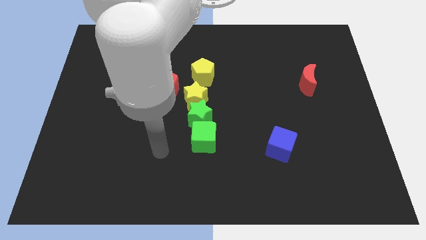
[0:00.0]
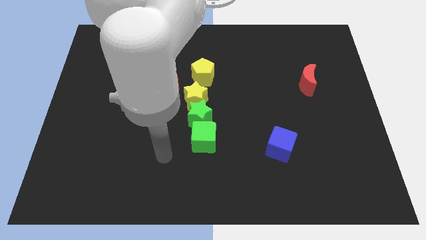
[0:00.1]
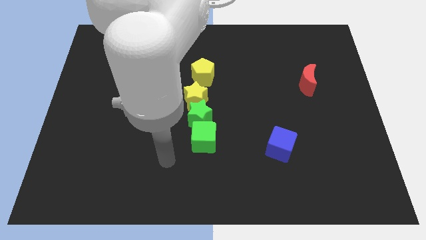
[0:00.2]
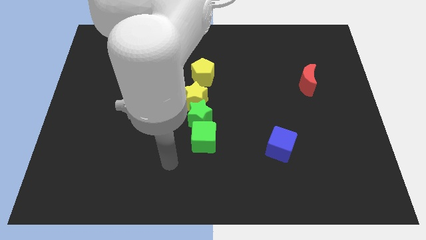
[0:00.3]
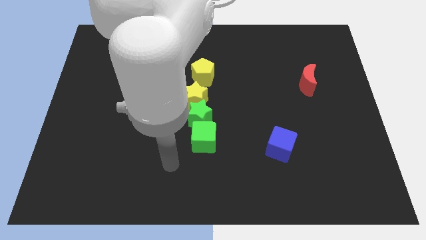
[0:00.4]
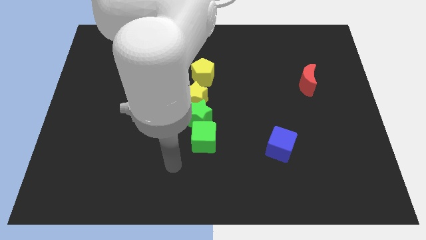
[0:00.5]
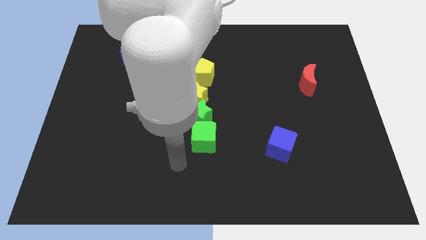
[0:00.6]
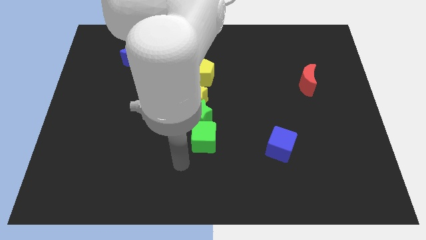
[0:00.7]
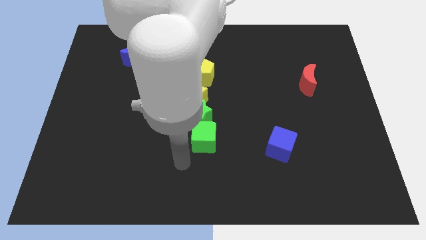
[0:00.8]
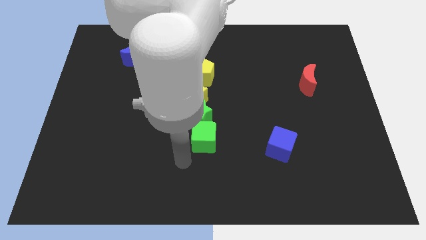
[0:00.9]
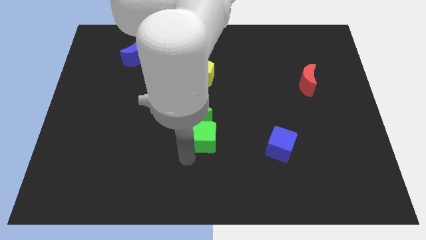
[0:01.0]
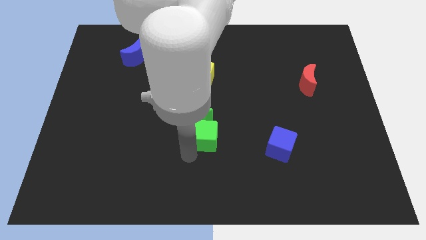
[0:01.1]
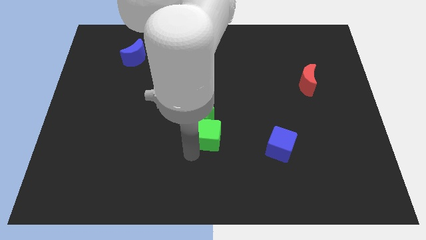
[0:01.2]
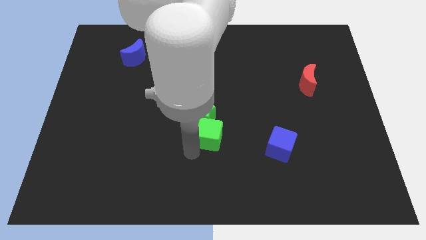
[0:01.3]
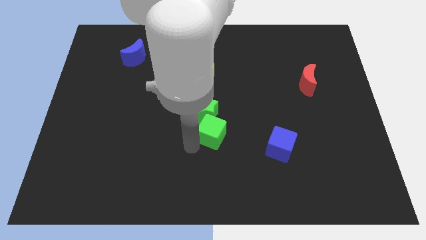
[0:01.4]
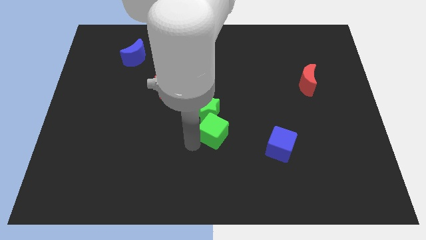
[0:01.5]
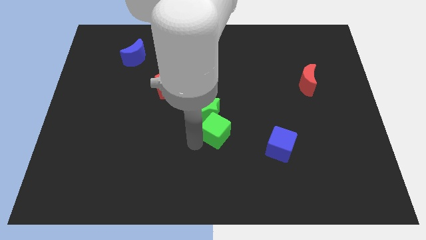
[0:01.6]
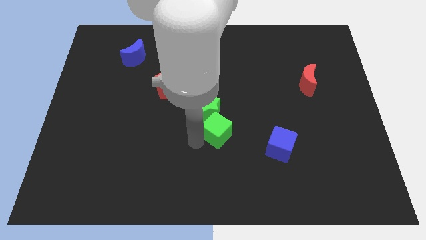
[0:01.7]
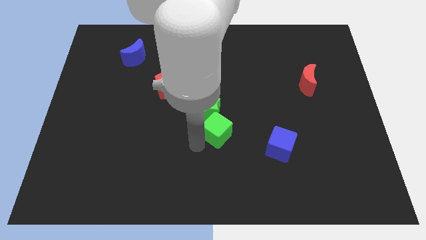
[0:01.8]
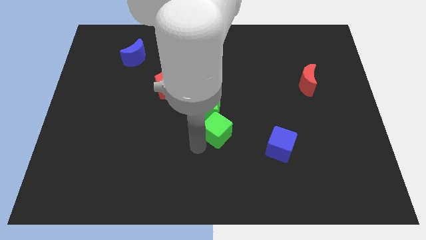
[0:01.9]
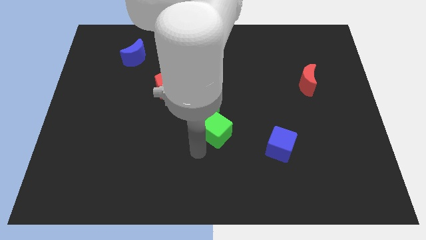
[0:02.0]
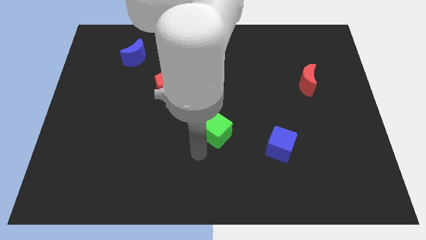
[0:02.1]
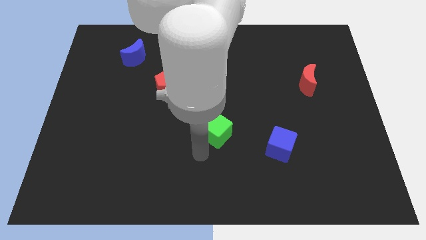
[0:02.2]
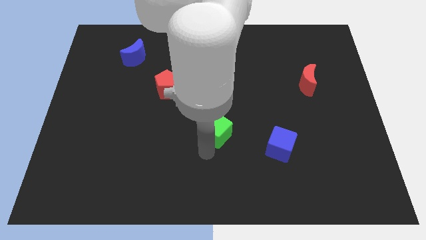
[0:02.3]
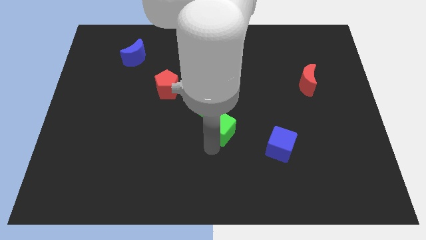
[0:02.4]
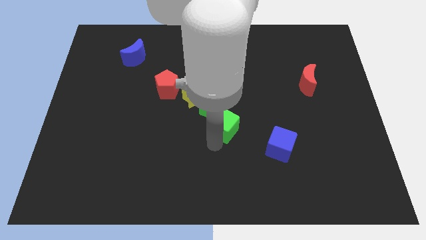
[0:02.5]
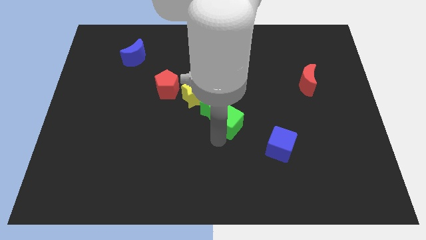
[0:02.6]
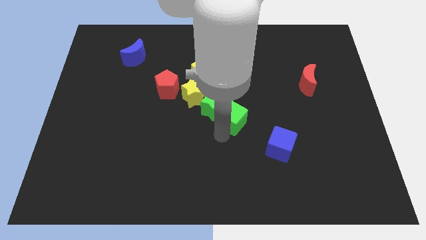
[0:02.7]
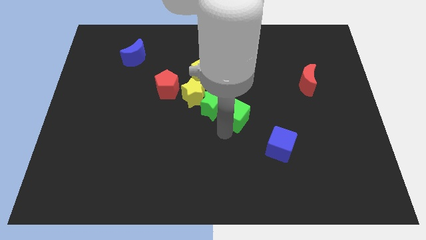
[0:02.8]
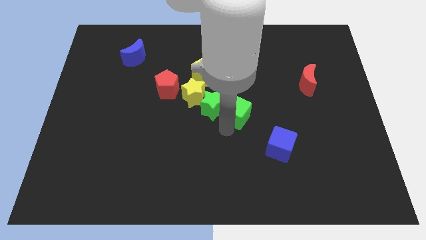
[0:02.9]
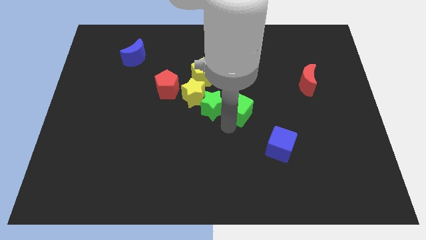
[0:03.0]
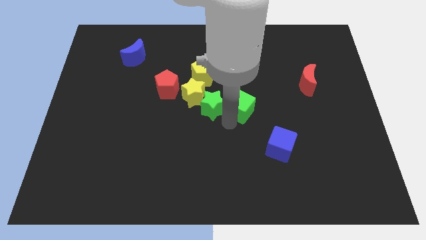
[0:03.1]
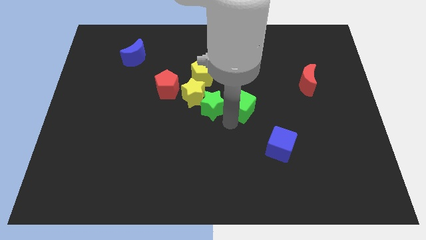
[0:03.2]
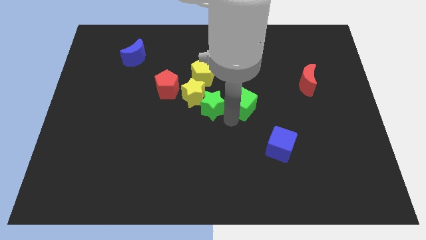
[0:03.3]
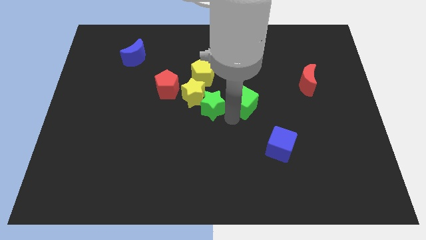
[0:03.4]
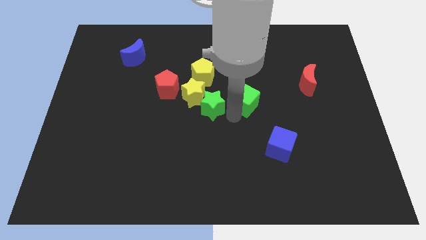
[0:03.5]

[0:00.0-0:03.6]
move the green cube to the right of the green star

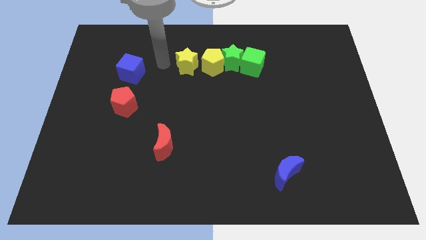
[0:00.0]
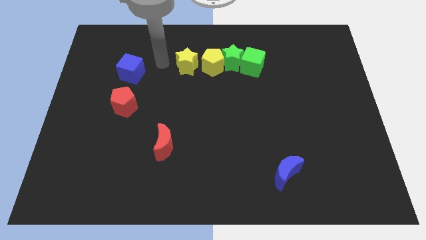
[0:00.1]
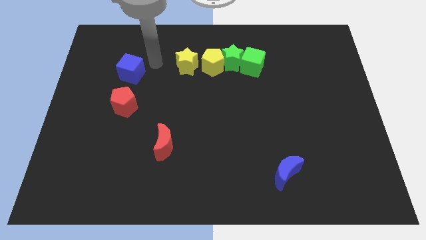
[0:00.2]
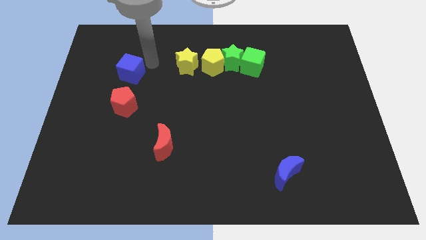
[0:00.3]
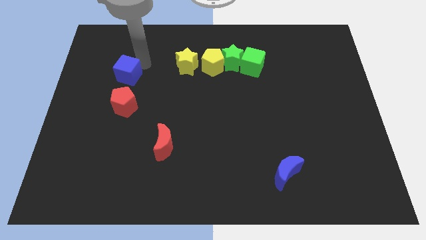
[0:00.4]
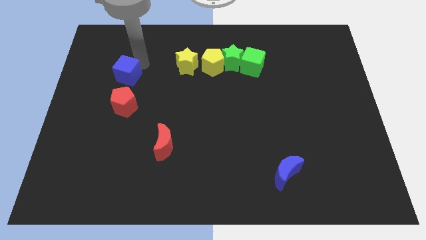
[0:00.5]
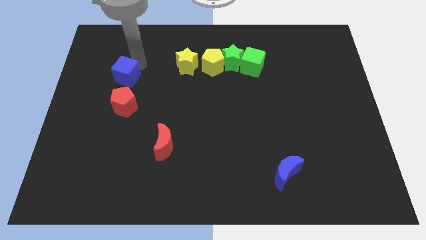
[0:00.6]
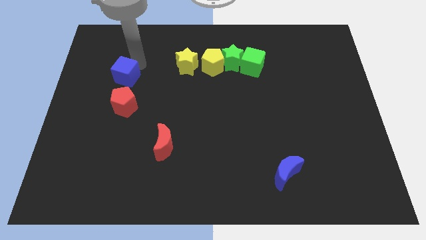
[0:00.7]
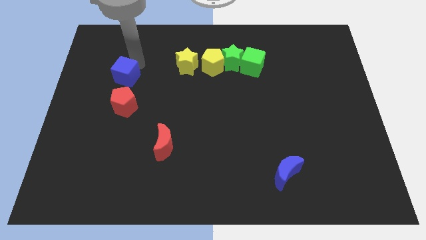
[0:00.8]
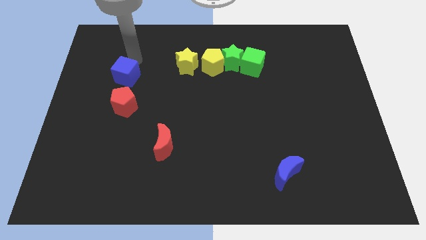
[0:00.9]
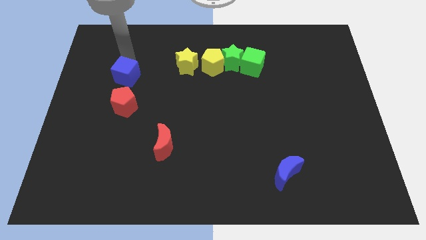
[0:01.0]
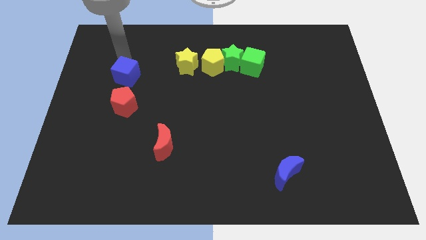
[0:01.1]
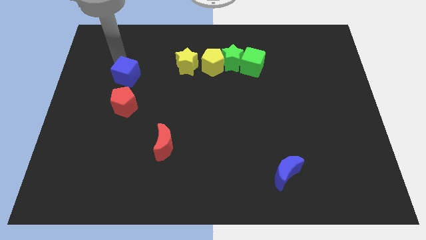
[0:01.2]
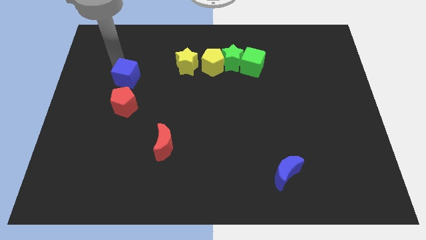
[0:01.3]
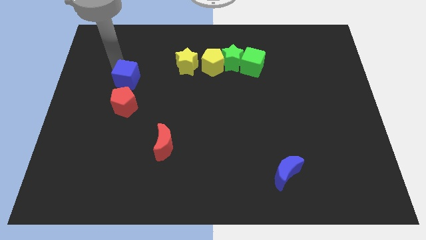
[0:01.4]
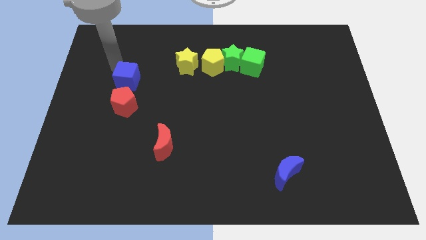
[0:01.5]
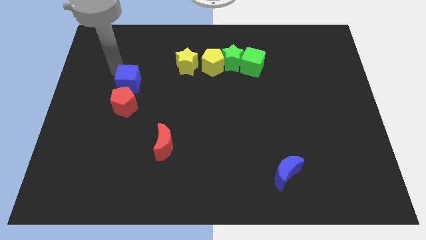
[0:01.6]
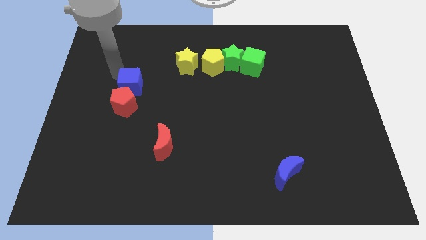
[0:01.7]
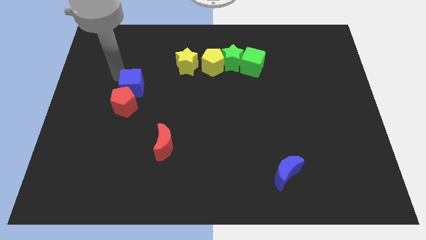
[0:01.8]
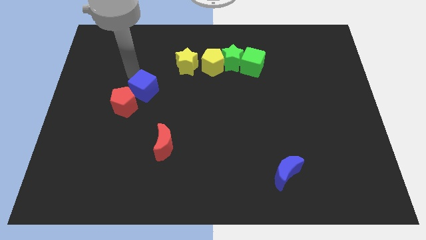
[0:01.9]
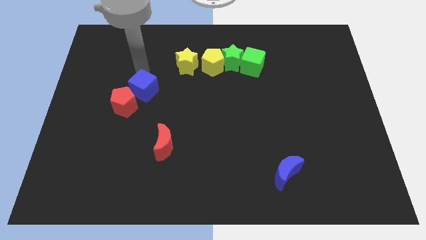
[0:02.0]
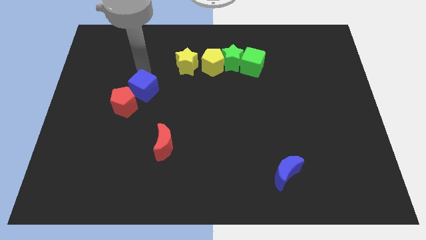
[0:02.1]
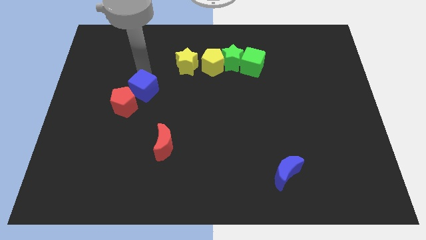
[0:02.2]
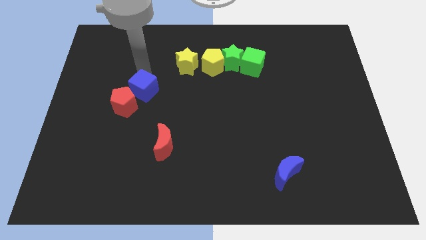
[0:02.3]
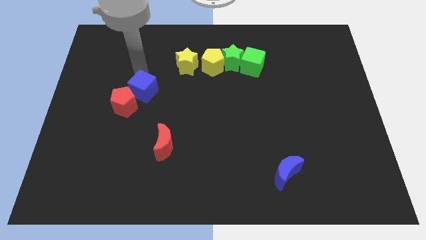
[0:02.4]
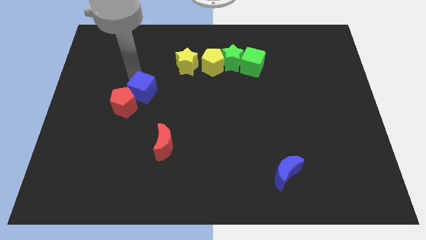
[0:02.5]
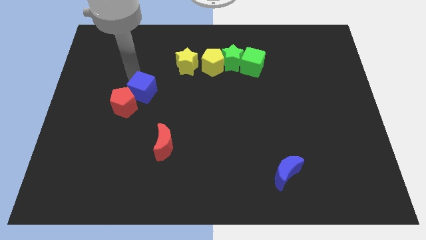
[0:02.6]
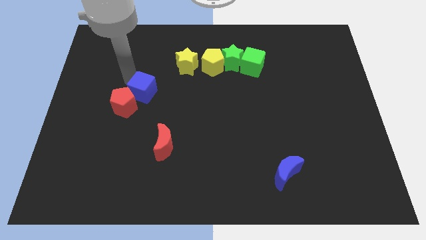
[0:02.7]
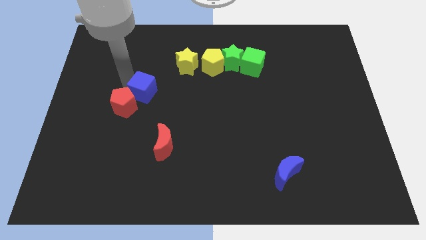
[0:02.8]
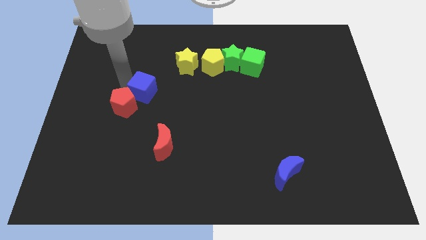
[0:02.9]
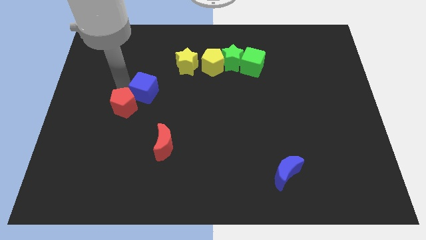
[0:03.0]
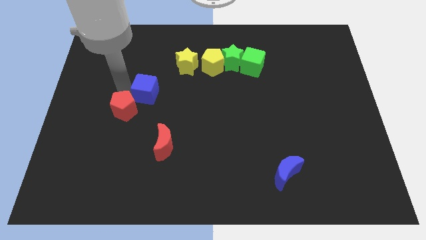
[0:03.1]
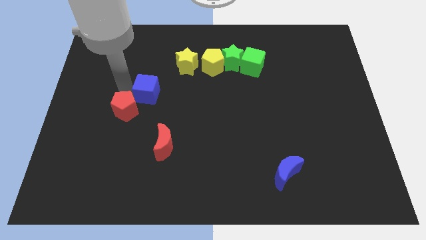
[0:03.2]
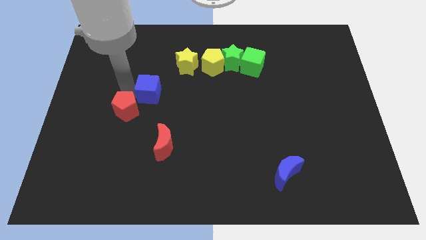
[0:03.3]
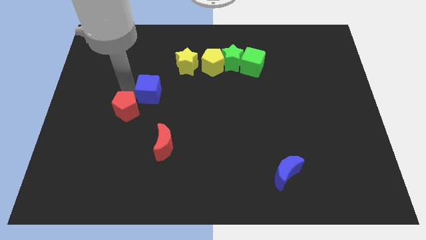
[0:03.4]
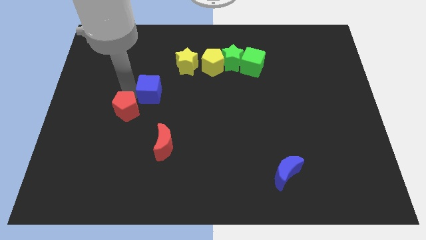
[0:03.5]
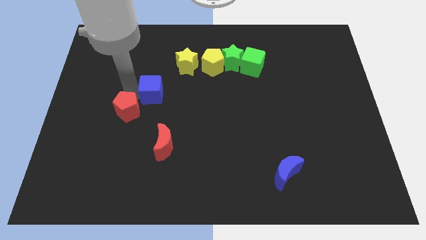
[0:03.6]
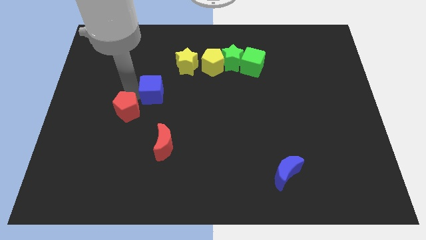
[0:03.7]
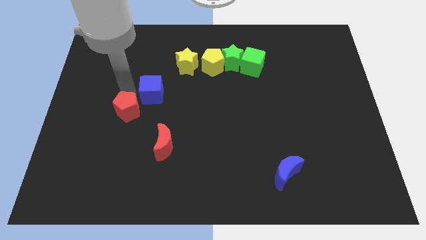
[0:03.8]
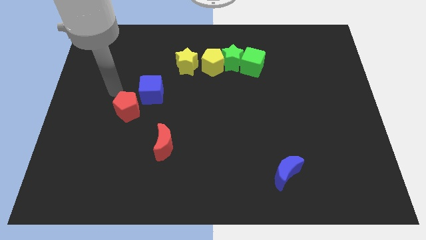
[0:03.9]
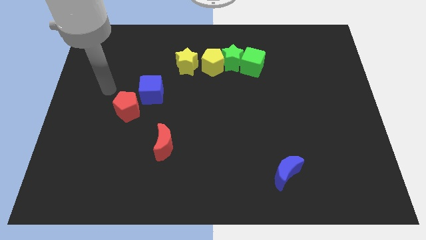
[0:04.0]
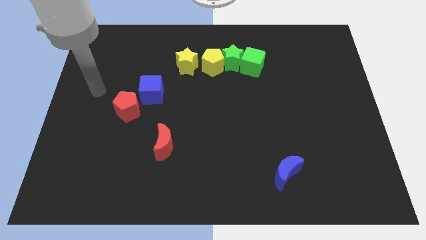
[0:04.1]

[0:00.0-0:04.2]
place blue cube diagonally right above red pentagon

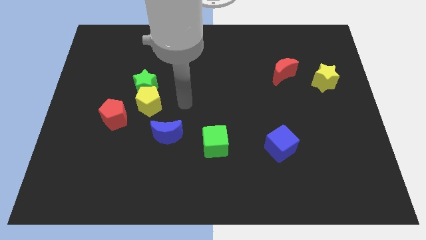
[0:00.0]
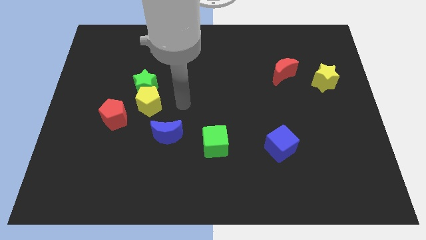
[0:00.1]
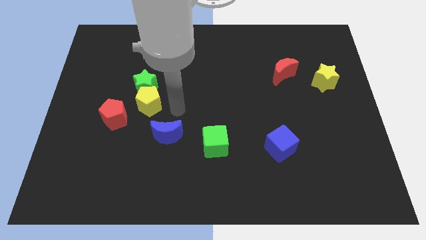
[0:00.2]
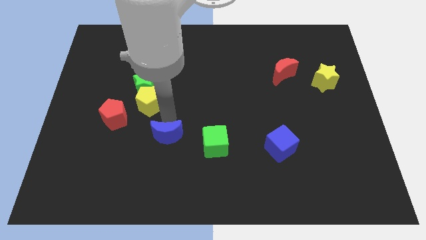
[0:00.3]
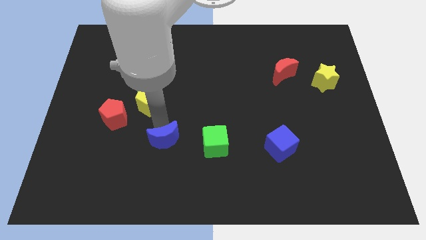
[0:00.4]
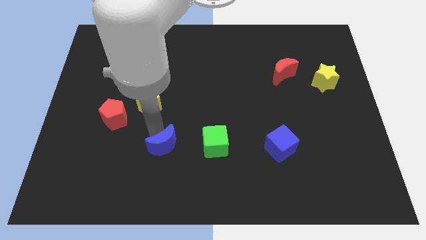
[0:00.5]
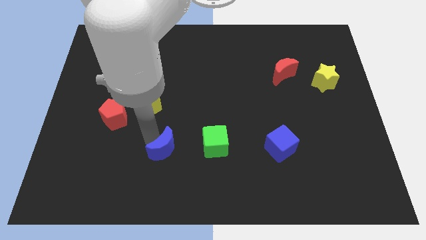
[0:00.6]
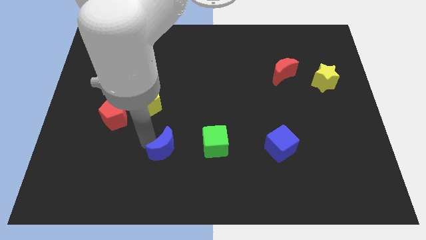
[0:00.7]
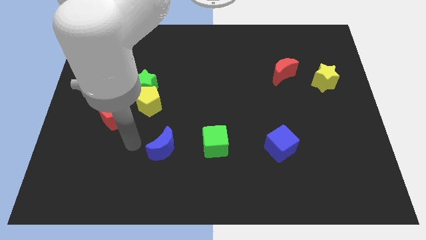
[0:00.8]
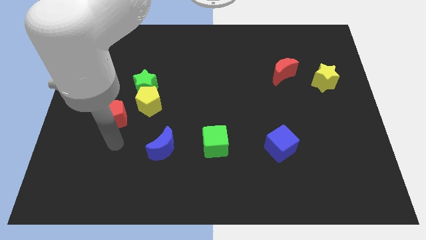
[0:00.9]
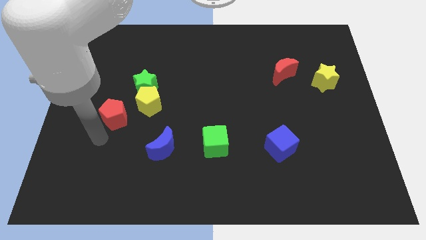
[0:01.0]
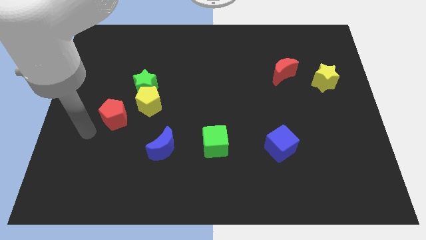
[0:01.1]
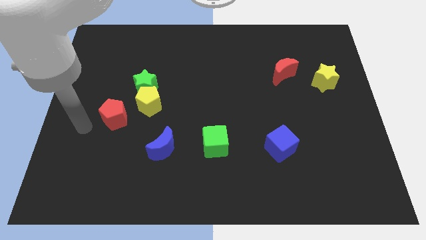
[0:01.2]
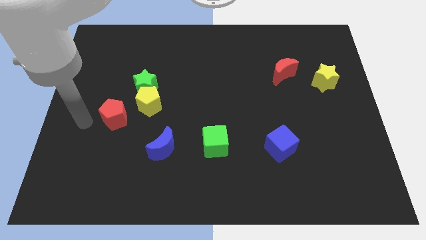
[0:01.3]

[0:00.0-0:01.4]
tap at the top side of the blue crescent
